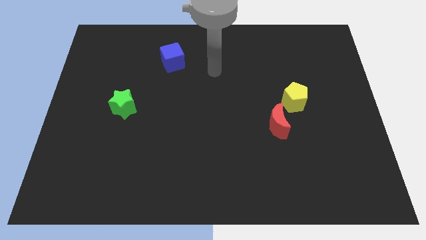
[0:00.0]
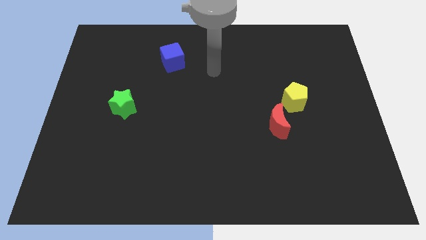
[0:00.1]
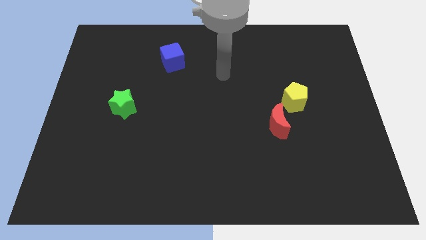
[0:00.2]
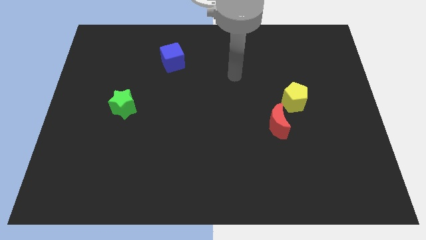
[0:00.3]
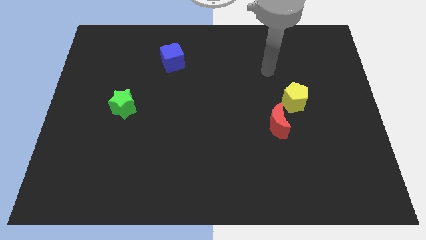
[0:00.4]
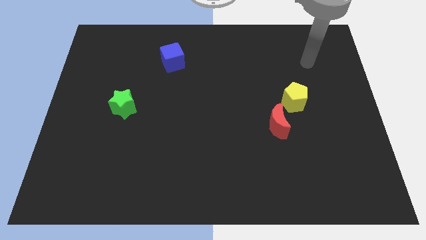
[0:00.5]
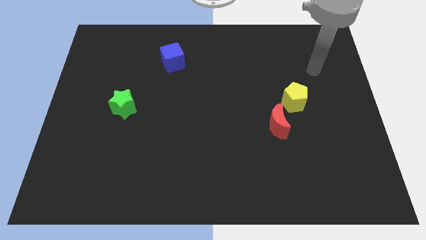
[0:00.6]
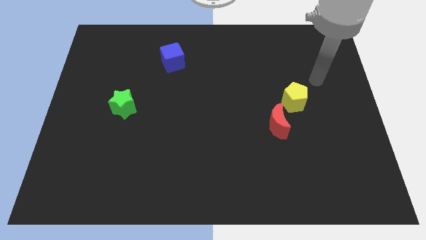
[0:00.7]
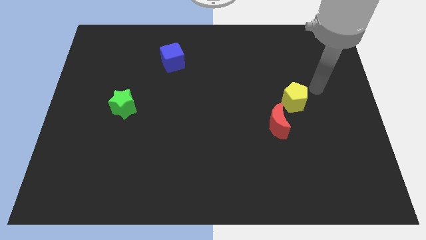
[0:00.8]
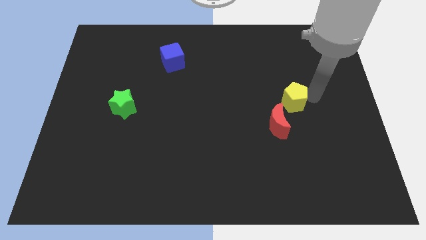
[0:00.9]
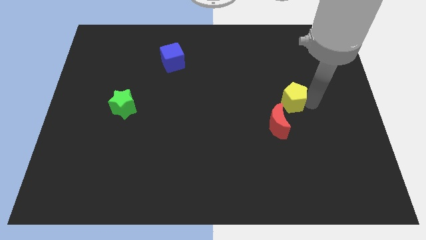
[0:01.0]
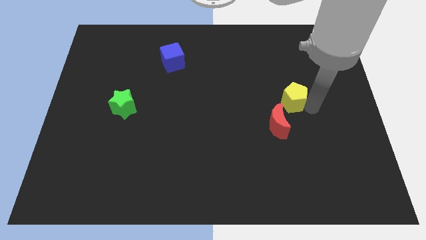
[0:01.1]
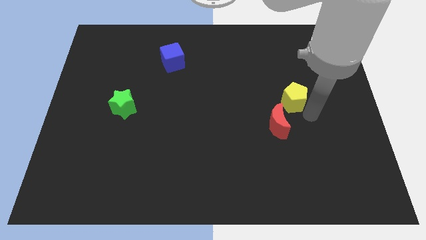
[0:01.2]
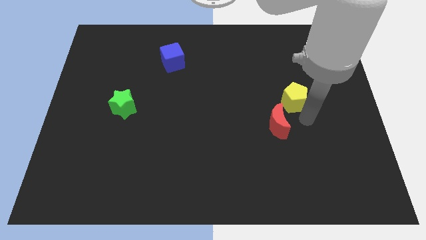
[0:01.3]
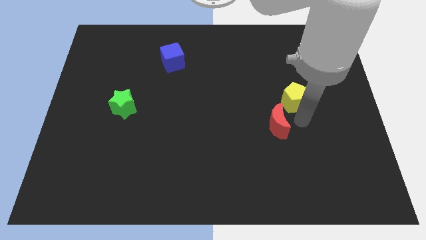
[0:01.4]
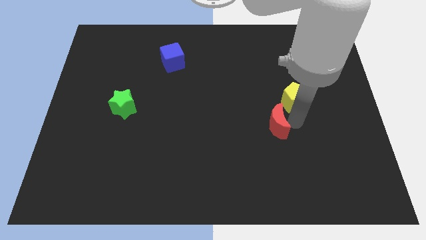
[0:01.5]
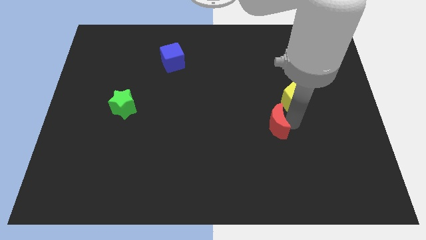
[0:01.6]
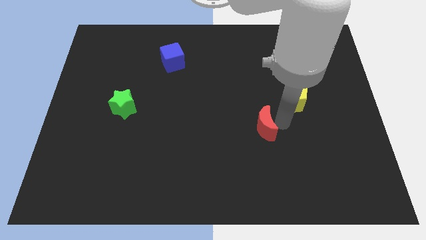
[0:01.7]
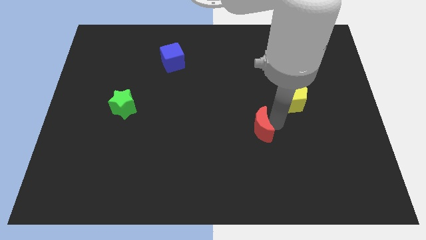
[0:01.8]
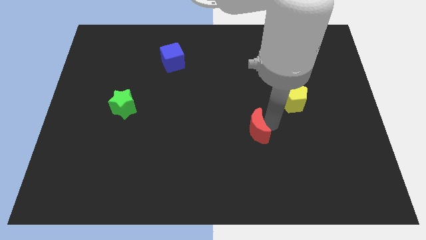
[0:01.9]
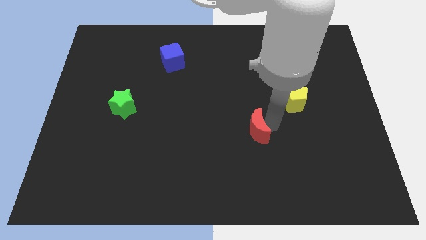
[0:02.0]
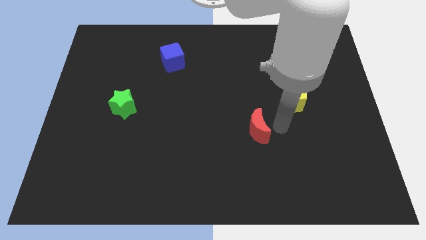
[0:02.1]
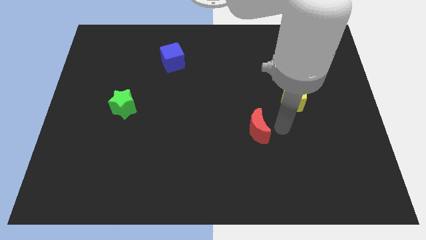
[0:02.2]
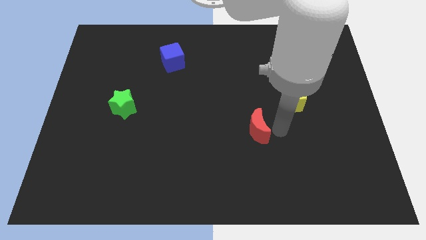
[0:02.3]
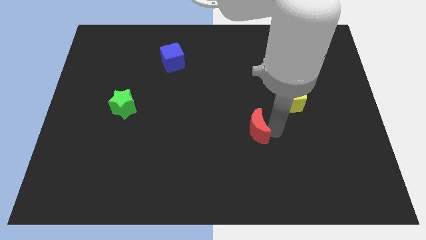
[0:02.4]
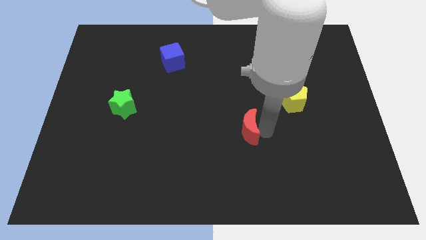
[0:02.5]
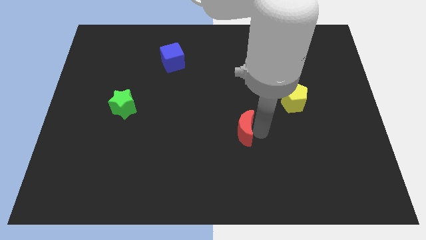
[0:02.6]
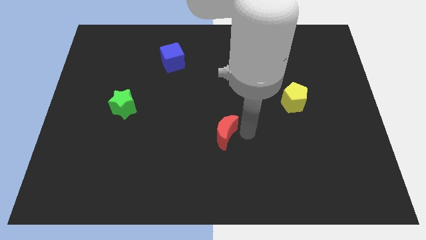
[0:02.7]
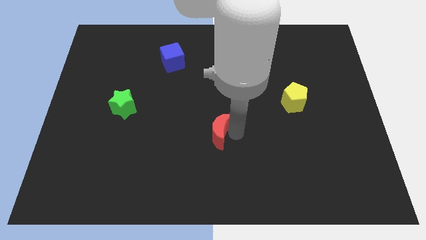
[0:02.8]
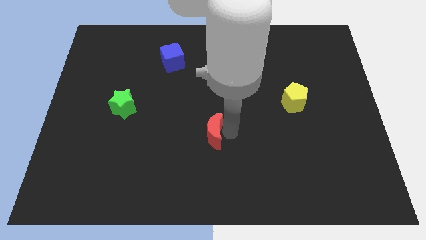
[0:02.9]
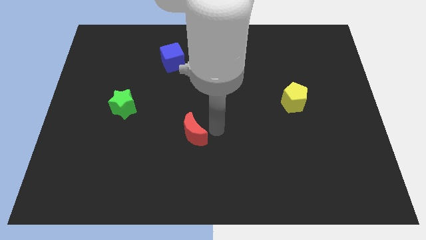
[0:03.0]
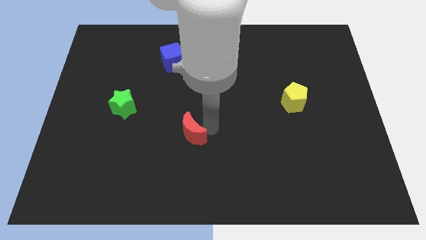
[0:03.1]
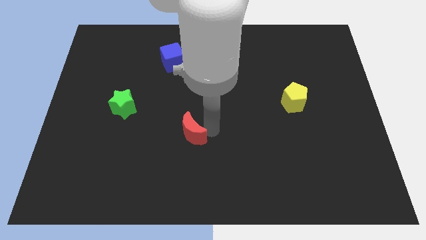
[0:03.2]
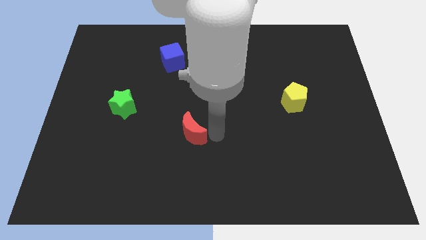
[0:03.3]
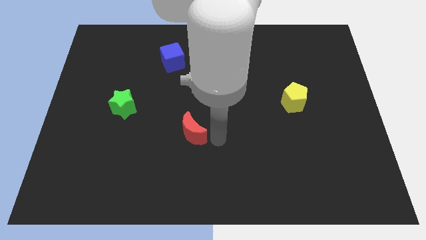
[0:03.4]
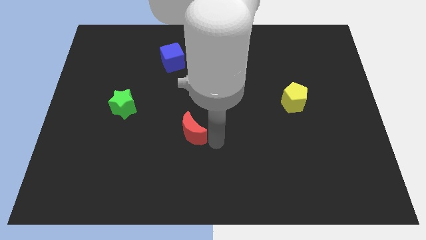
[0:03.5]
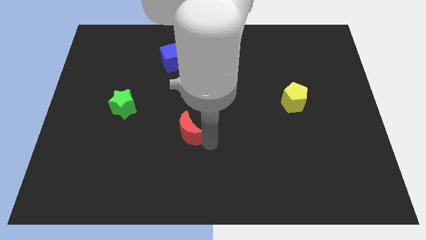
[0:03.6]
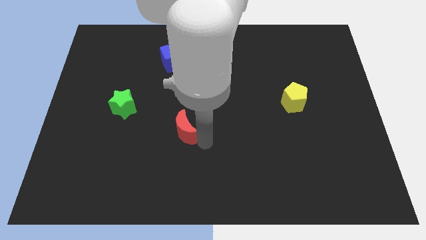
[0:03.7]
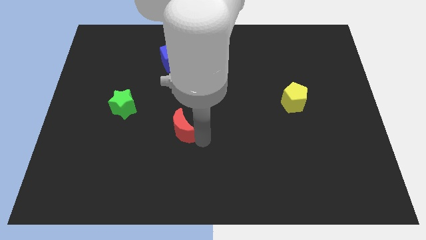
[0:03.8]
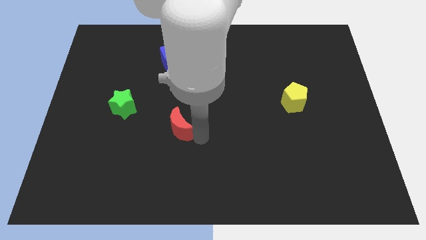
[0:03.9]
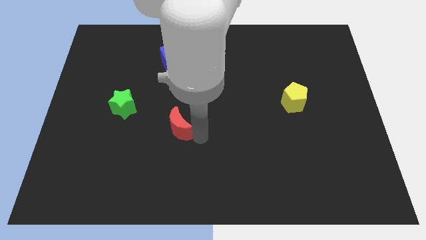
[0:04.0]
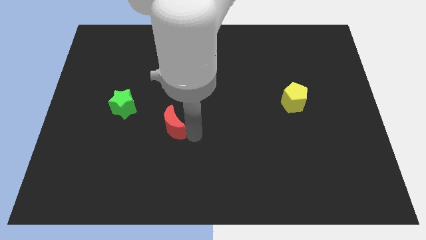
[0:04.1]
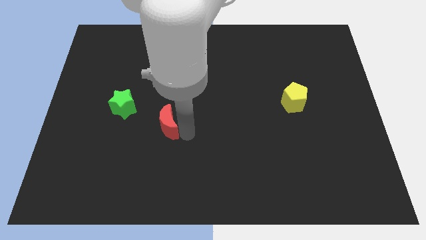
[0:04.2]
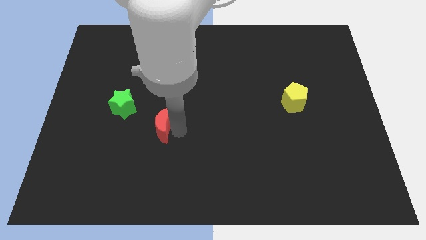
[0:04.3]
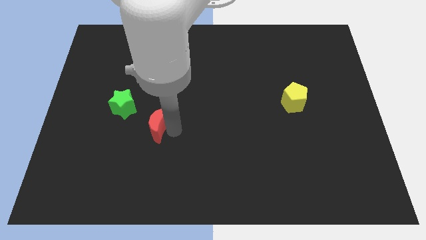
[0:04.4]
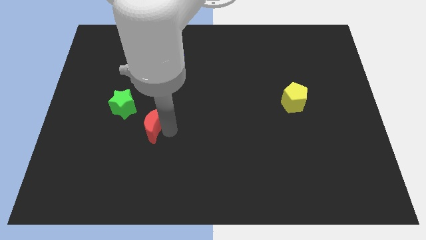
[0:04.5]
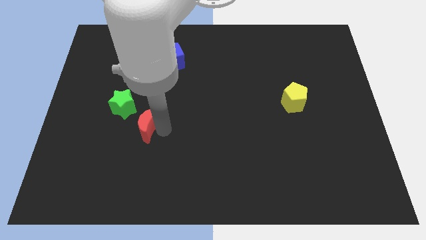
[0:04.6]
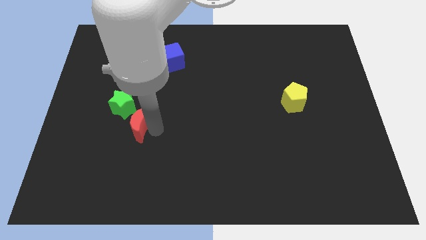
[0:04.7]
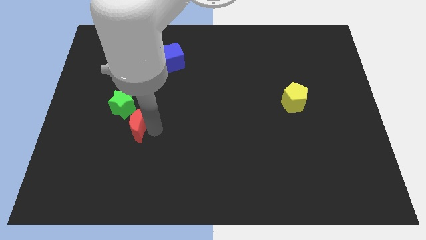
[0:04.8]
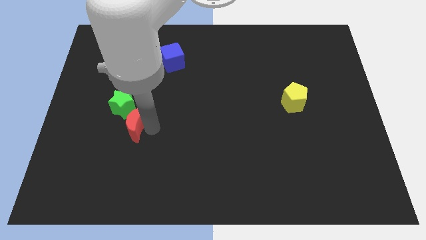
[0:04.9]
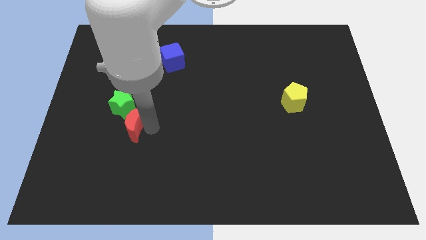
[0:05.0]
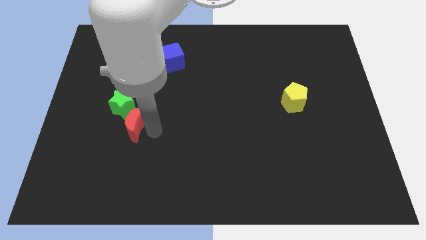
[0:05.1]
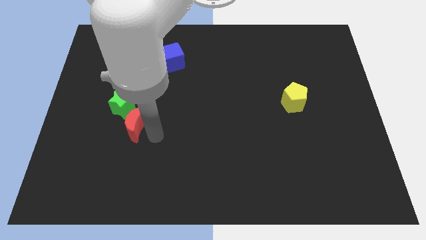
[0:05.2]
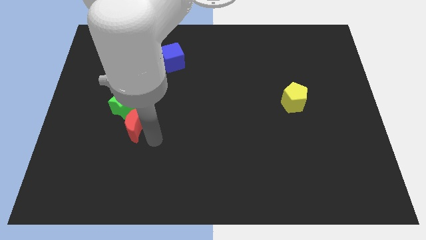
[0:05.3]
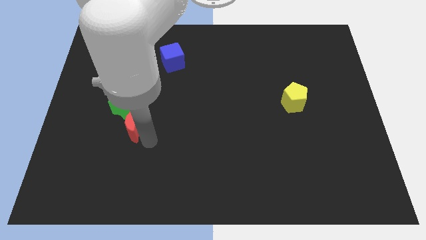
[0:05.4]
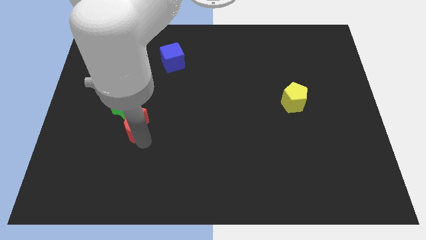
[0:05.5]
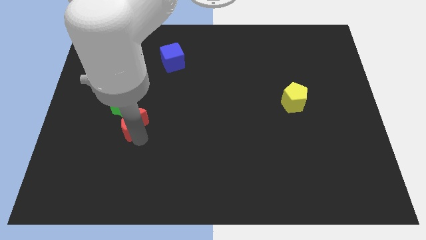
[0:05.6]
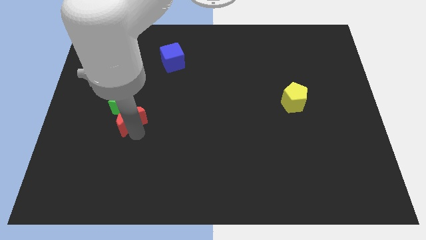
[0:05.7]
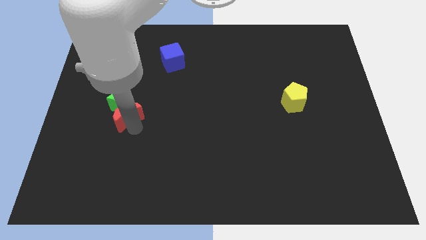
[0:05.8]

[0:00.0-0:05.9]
move the red block next to the star

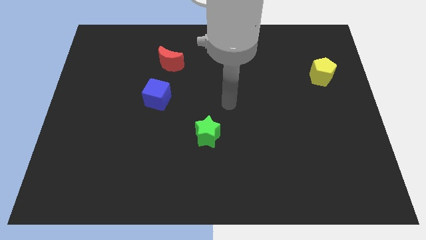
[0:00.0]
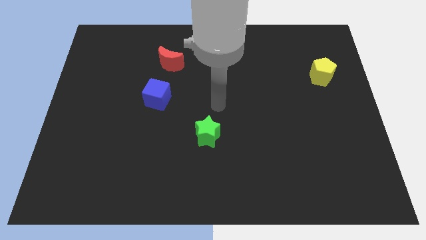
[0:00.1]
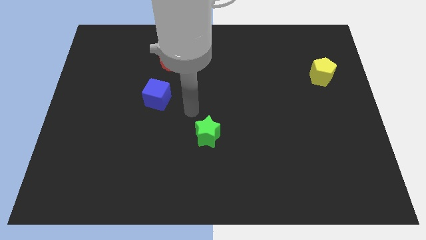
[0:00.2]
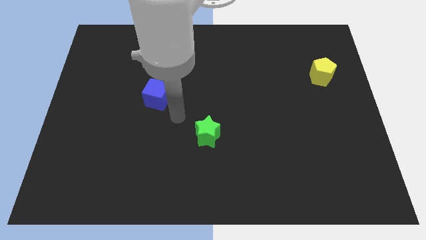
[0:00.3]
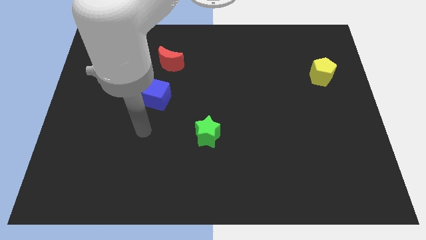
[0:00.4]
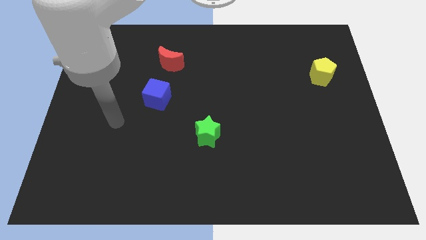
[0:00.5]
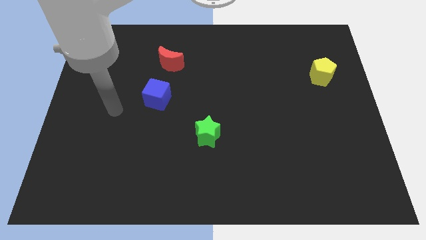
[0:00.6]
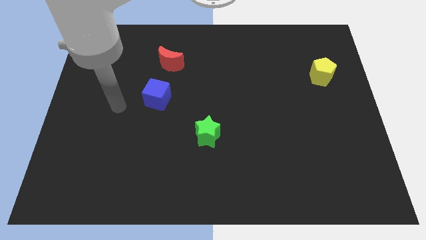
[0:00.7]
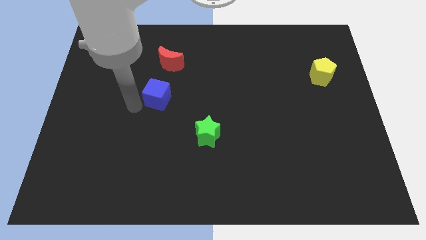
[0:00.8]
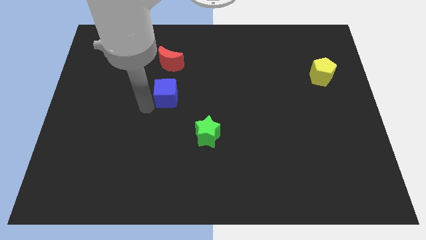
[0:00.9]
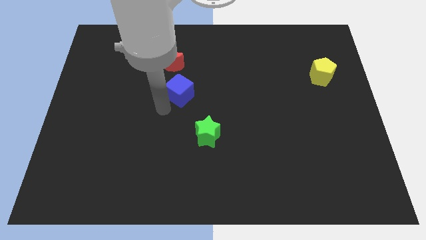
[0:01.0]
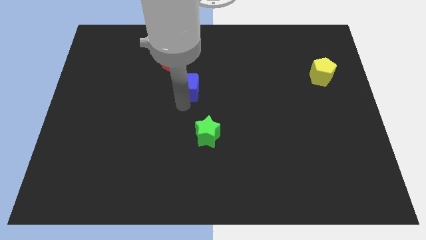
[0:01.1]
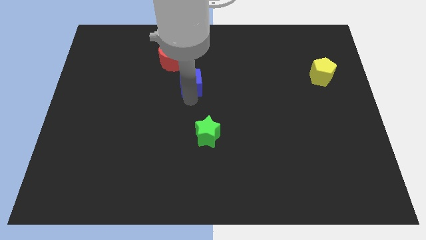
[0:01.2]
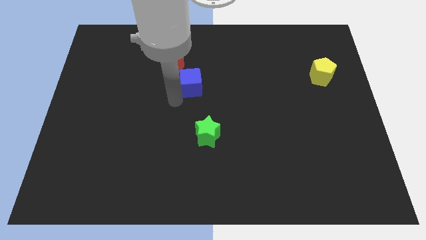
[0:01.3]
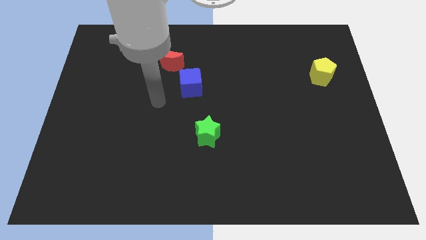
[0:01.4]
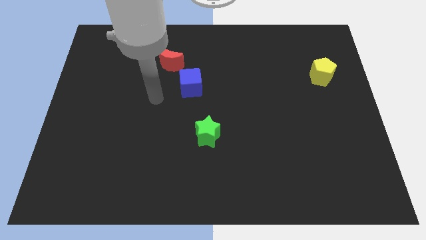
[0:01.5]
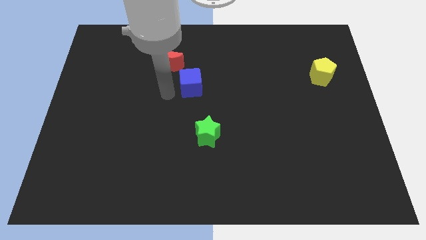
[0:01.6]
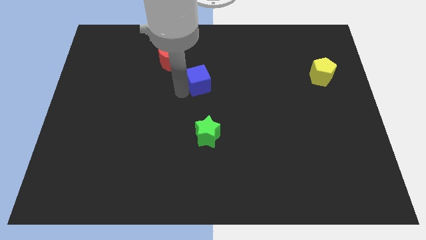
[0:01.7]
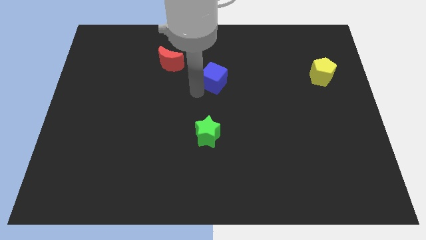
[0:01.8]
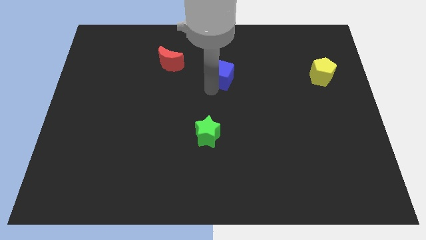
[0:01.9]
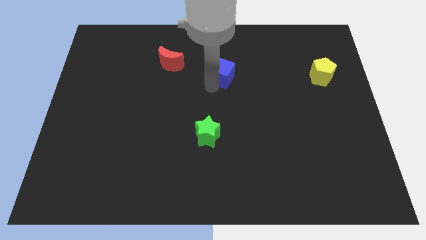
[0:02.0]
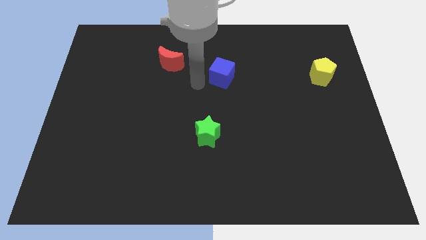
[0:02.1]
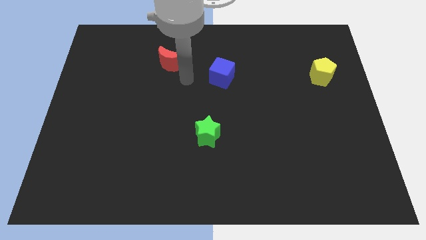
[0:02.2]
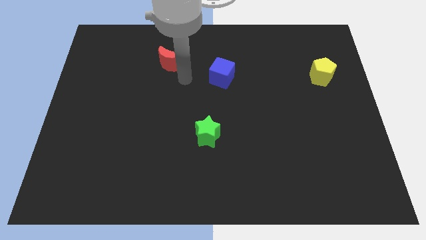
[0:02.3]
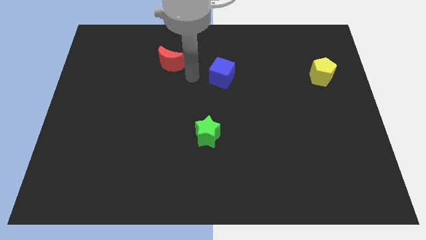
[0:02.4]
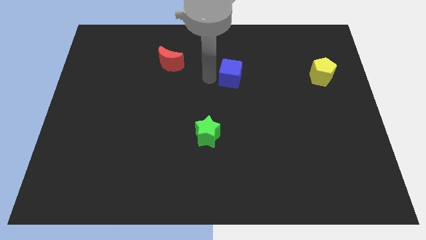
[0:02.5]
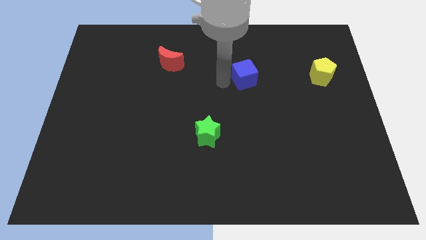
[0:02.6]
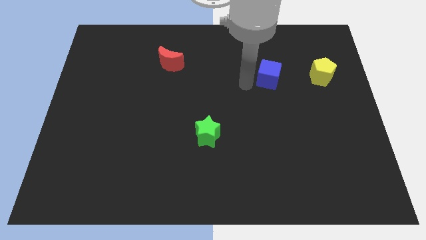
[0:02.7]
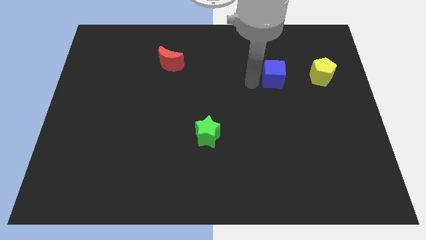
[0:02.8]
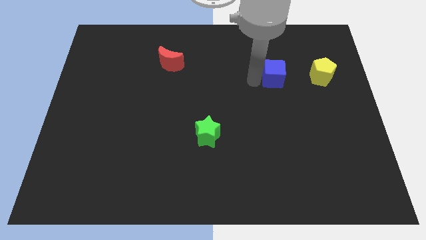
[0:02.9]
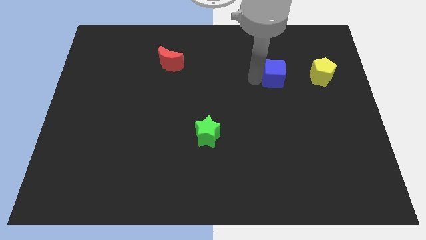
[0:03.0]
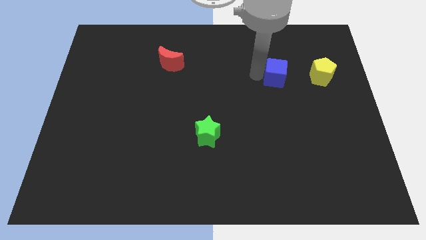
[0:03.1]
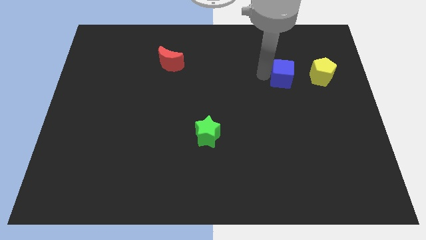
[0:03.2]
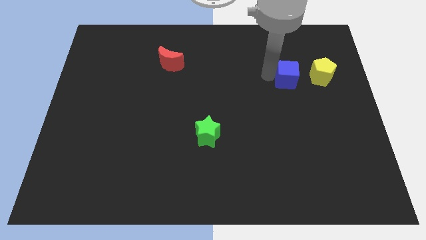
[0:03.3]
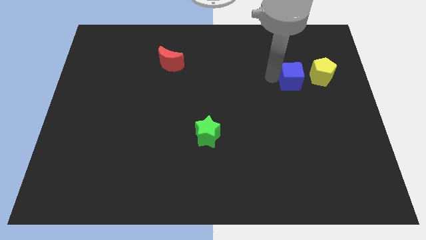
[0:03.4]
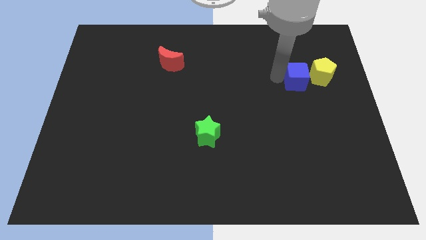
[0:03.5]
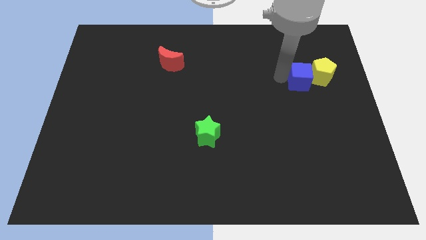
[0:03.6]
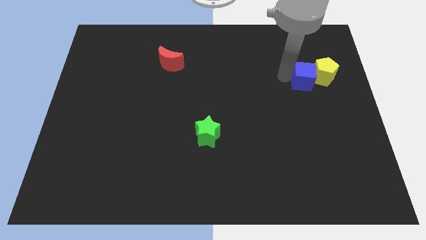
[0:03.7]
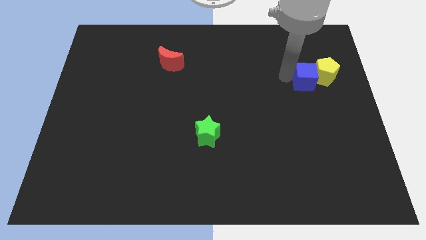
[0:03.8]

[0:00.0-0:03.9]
push the blue cube close to the pentagon
